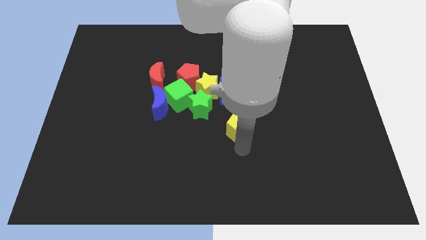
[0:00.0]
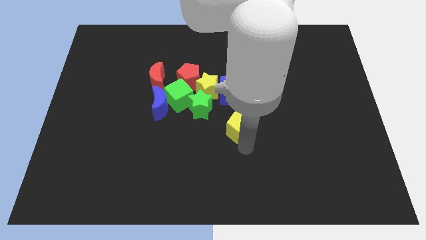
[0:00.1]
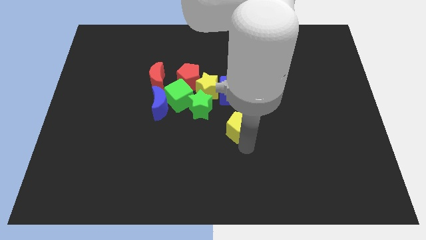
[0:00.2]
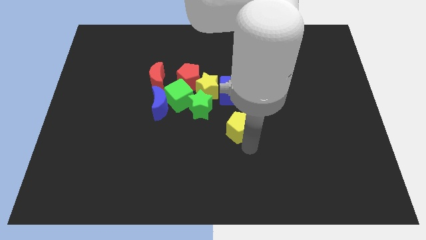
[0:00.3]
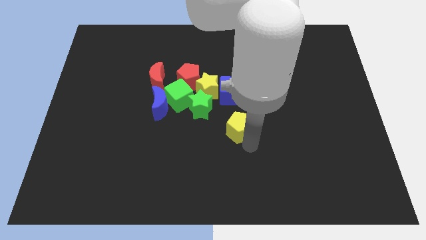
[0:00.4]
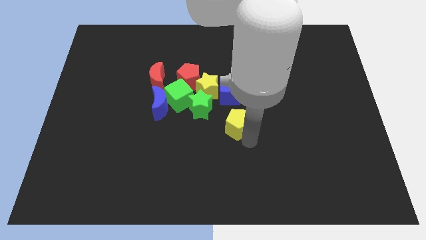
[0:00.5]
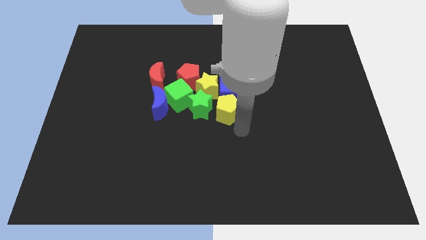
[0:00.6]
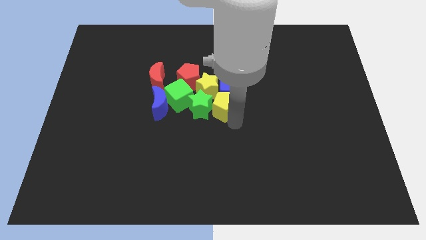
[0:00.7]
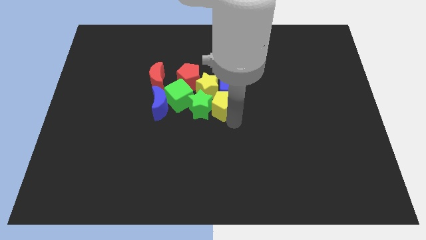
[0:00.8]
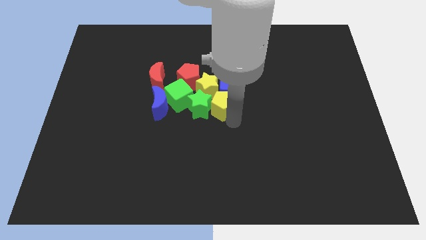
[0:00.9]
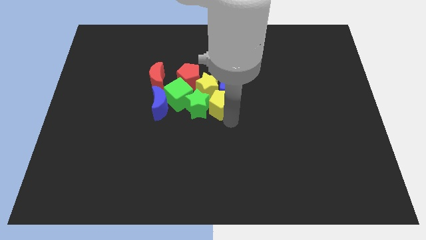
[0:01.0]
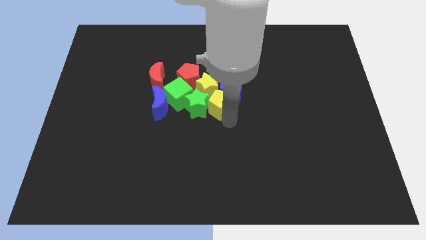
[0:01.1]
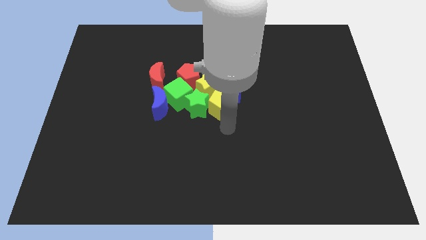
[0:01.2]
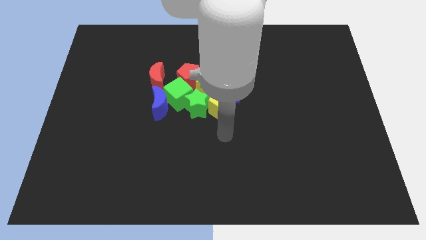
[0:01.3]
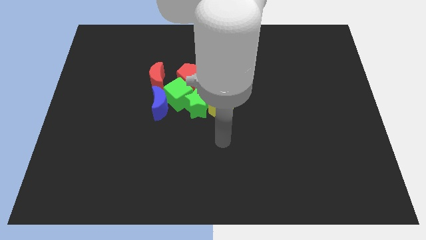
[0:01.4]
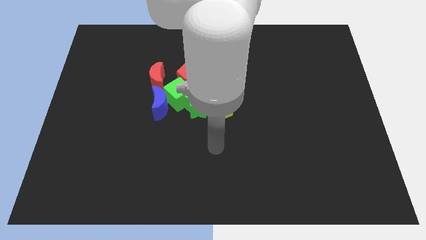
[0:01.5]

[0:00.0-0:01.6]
place the yellow pentagon into the group of blocks

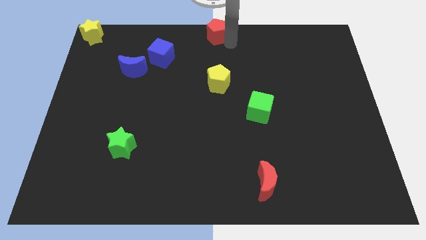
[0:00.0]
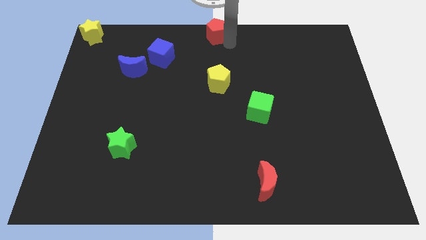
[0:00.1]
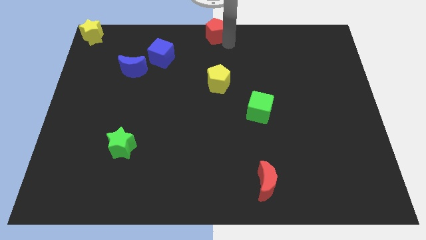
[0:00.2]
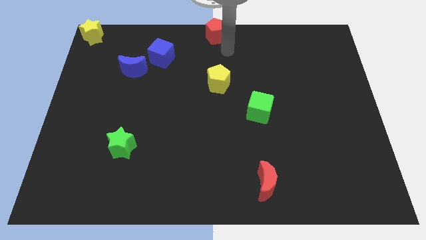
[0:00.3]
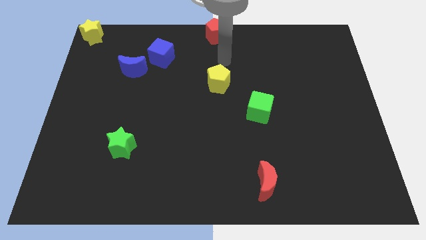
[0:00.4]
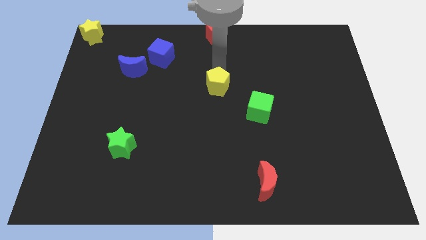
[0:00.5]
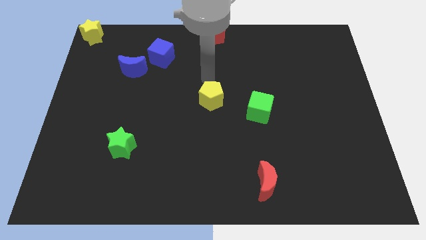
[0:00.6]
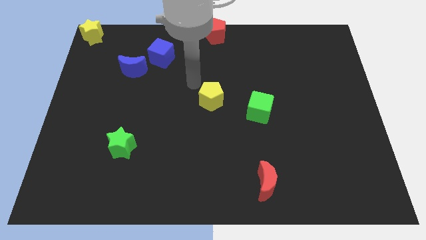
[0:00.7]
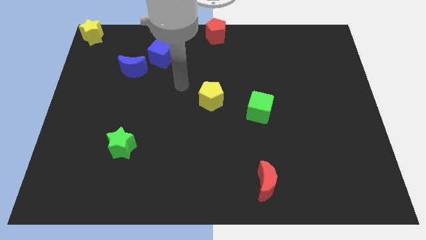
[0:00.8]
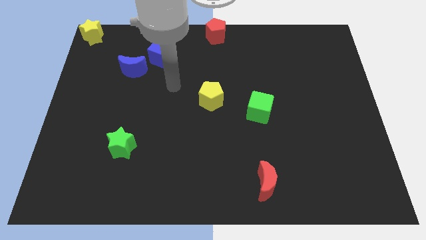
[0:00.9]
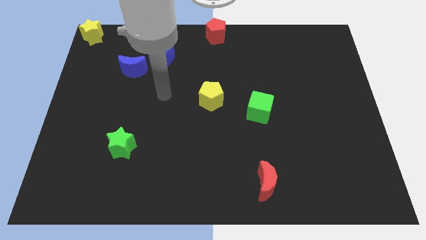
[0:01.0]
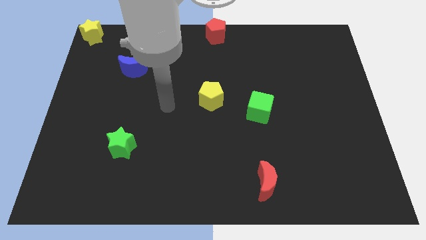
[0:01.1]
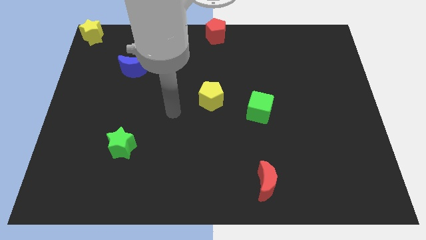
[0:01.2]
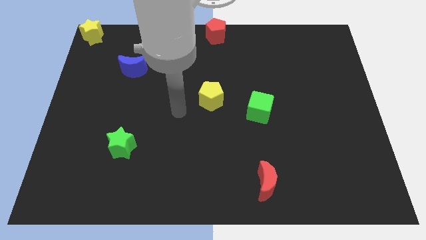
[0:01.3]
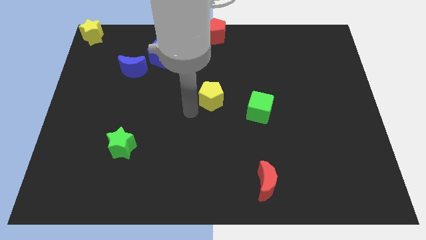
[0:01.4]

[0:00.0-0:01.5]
place the yellow pentagon at the centre of the board

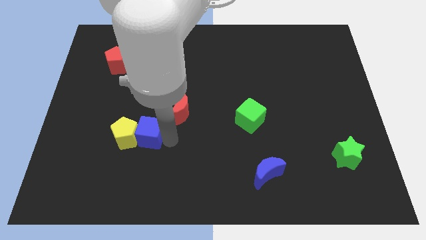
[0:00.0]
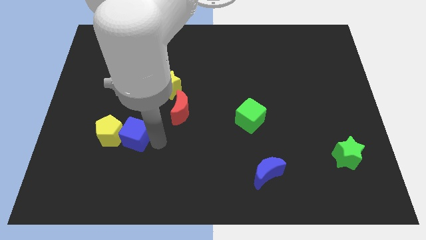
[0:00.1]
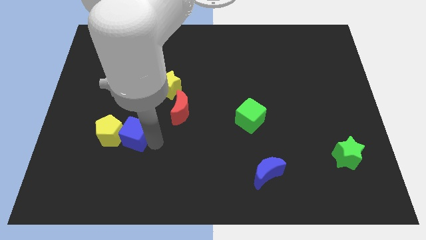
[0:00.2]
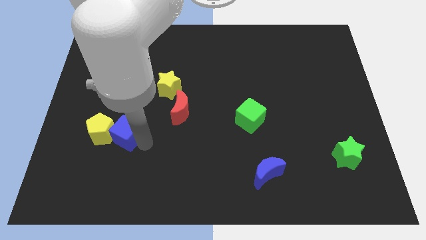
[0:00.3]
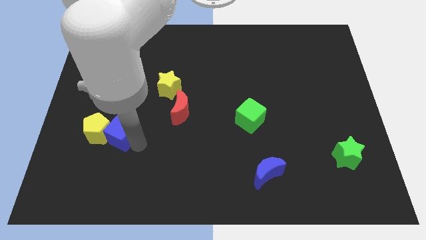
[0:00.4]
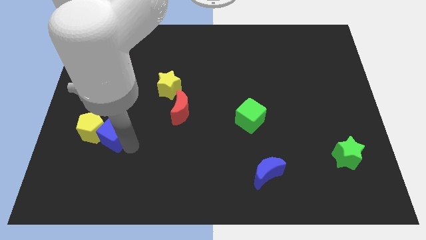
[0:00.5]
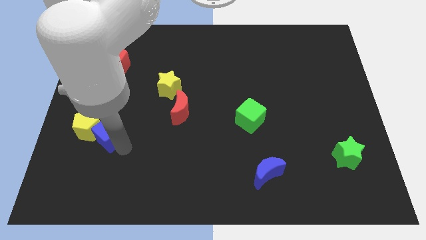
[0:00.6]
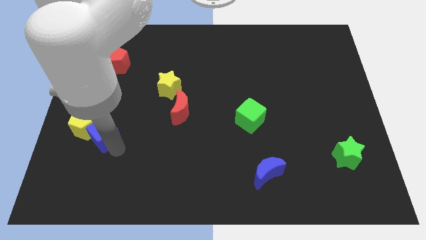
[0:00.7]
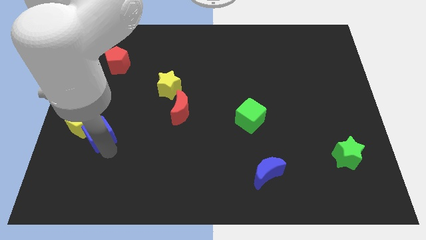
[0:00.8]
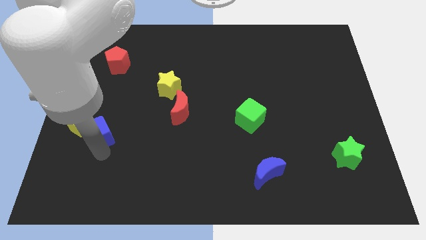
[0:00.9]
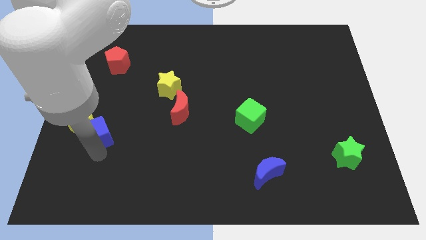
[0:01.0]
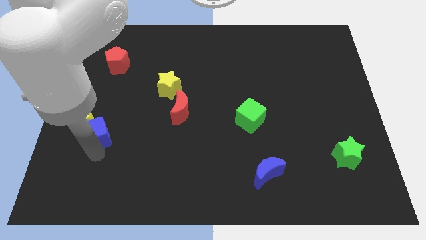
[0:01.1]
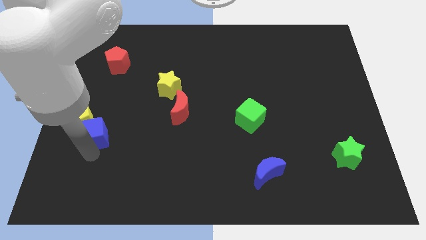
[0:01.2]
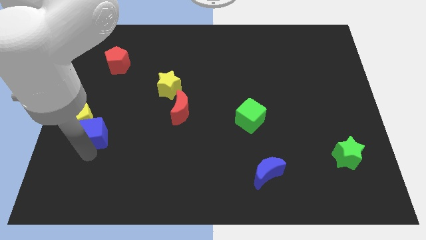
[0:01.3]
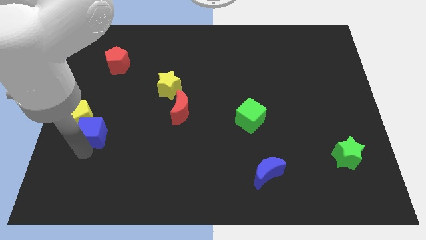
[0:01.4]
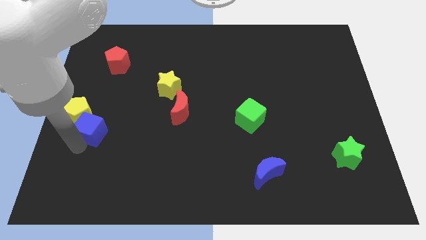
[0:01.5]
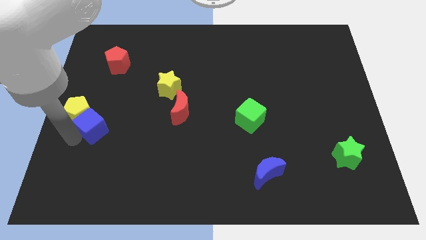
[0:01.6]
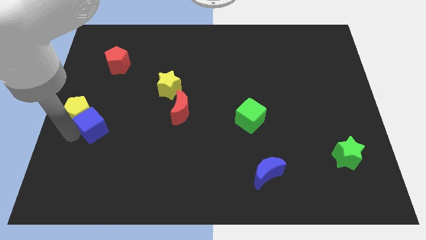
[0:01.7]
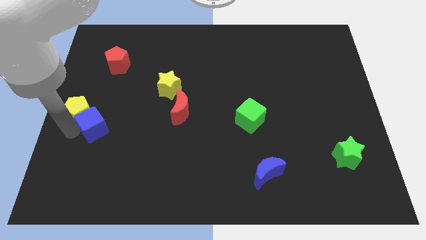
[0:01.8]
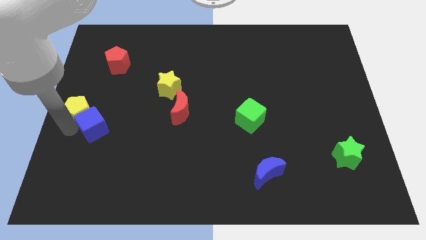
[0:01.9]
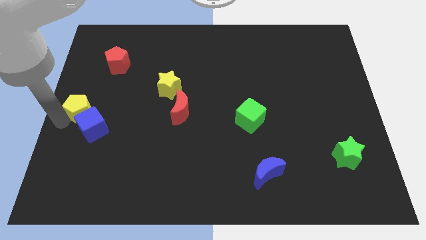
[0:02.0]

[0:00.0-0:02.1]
push blue cube along with yellow pentagon diagonally towards center left of the board

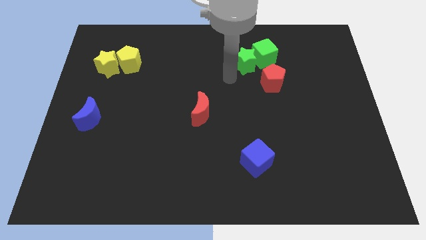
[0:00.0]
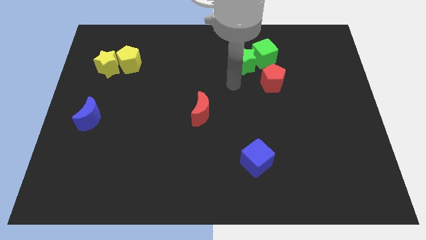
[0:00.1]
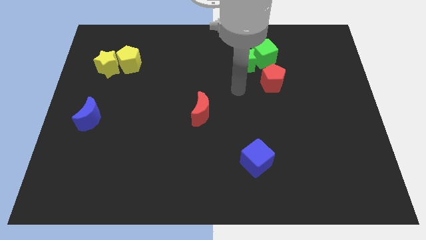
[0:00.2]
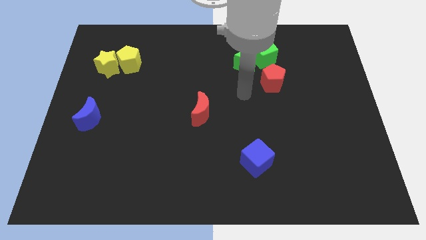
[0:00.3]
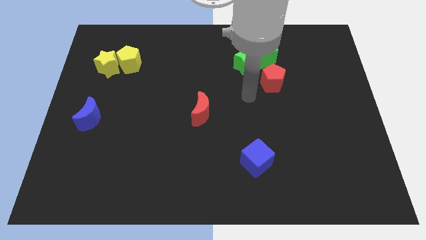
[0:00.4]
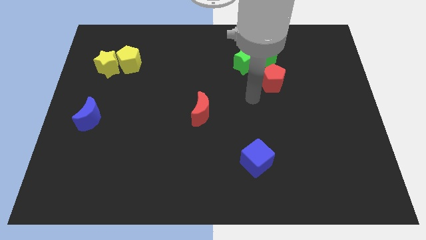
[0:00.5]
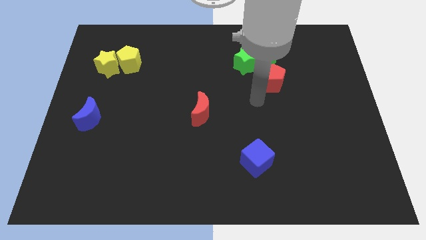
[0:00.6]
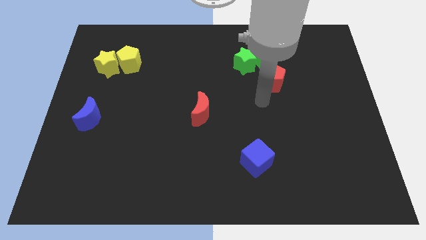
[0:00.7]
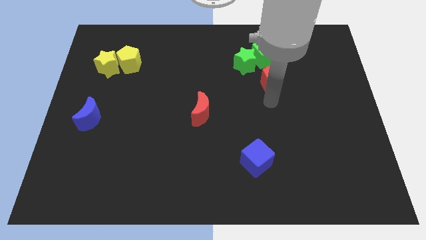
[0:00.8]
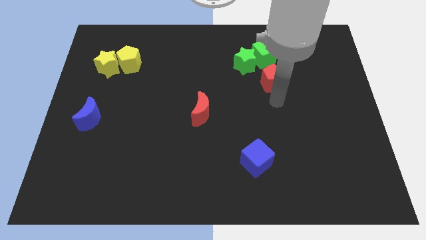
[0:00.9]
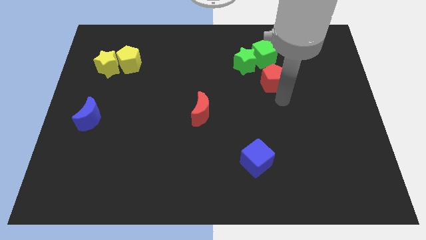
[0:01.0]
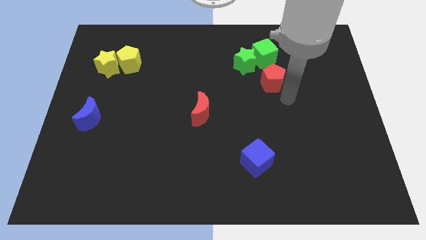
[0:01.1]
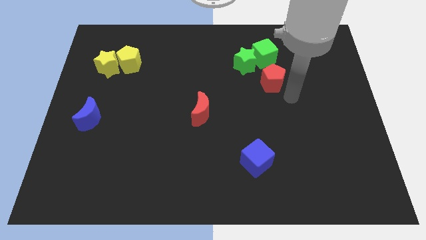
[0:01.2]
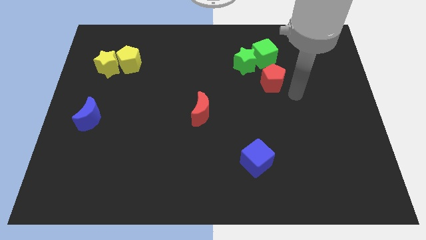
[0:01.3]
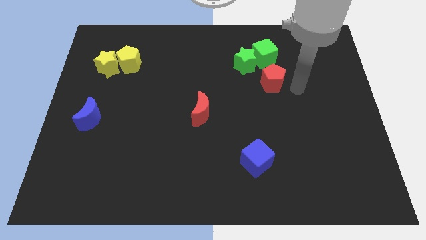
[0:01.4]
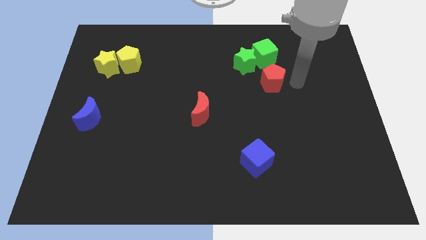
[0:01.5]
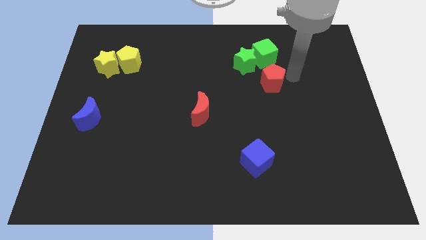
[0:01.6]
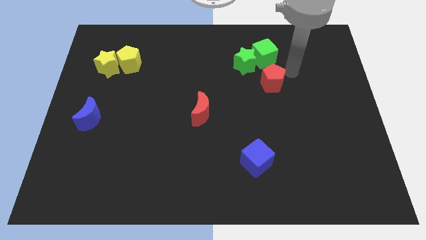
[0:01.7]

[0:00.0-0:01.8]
move the arm around the red pentagon

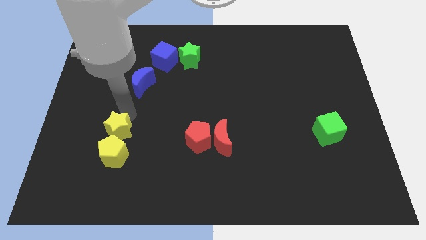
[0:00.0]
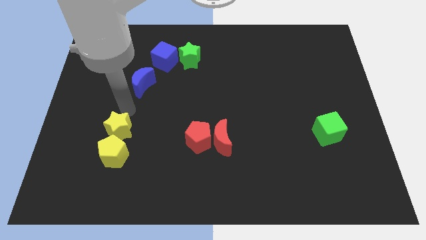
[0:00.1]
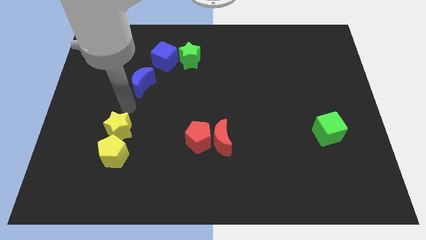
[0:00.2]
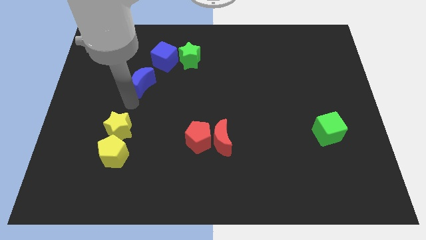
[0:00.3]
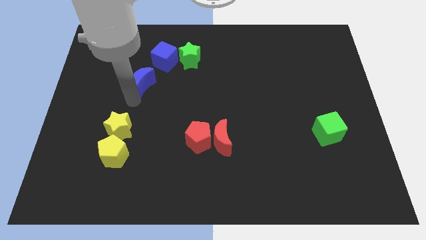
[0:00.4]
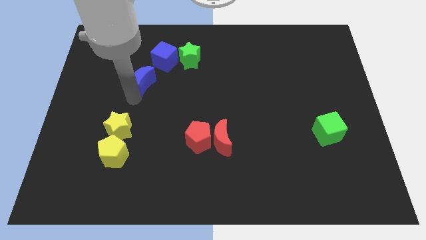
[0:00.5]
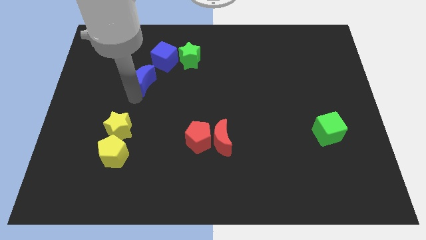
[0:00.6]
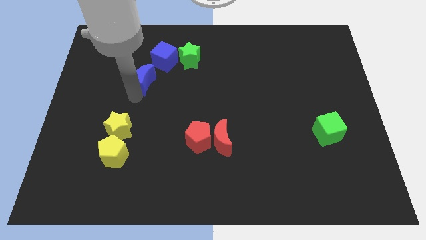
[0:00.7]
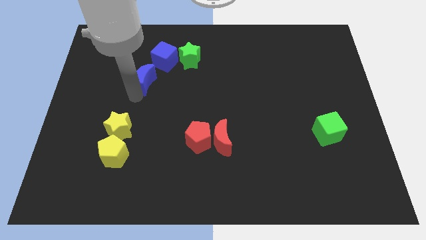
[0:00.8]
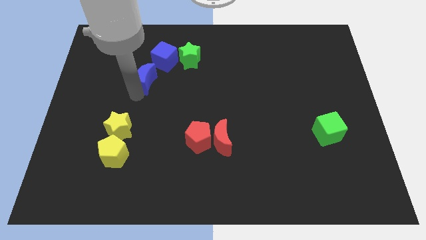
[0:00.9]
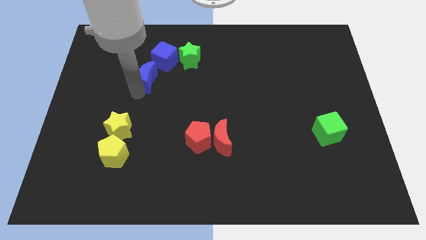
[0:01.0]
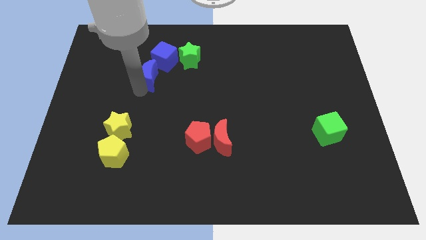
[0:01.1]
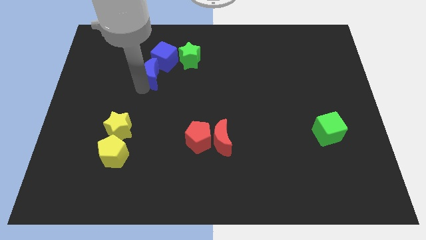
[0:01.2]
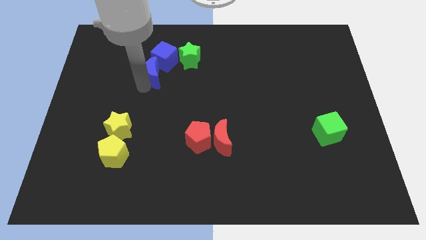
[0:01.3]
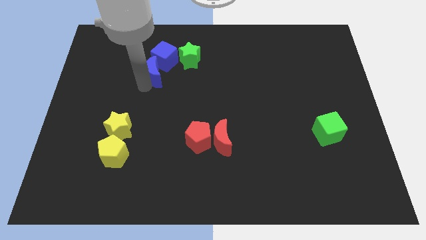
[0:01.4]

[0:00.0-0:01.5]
slightly push the blue moon at the bottom of blue cube

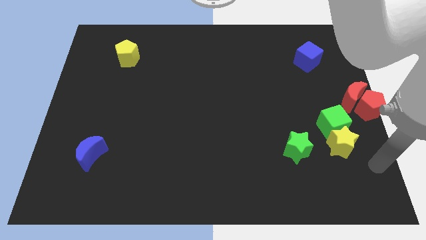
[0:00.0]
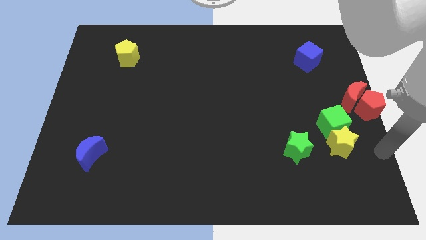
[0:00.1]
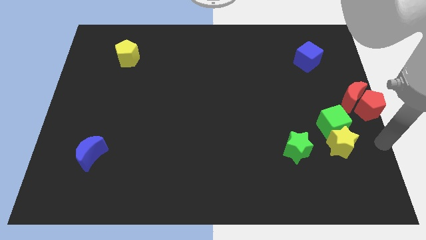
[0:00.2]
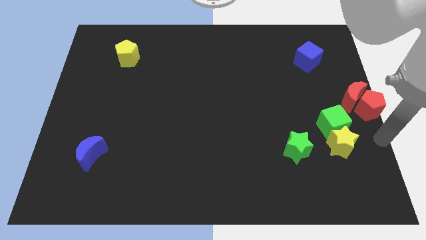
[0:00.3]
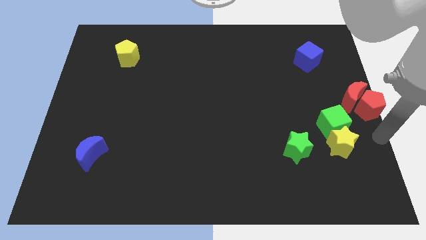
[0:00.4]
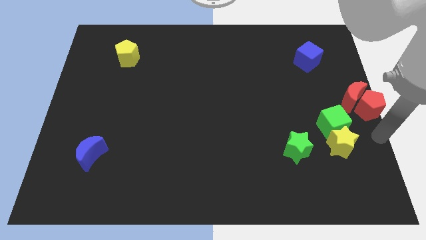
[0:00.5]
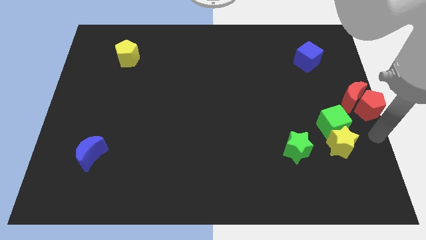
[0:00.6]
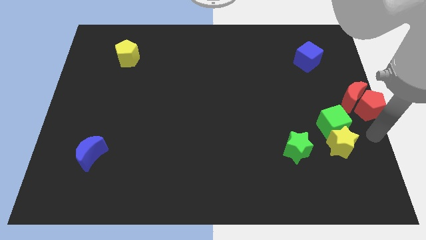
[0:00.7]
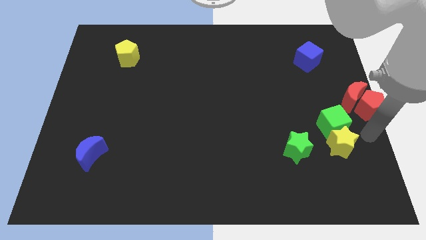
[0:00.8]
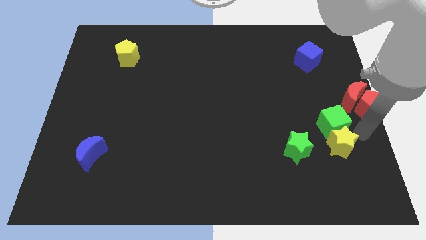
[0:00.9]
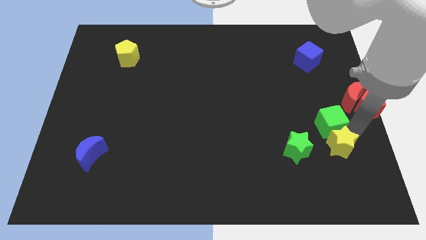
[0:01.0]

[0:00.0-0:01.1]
touch the bottom of green cube
